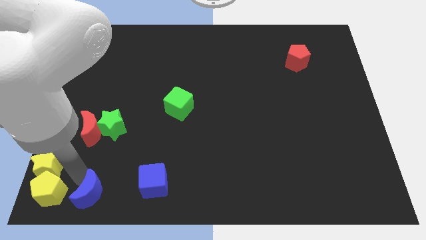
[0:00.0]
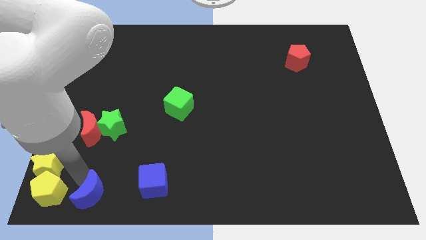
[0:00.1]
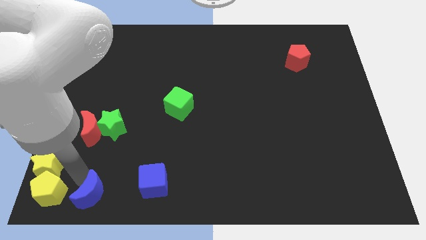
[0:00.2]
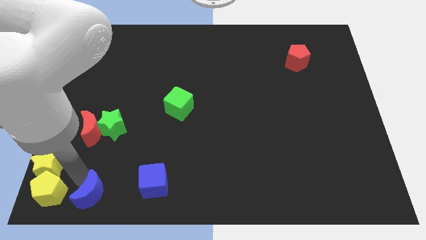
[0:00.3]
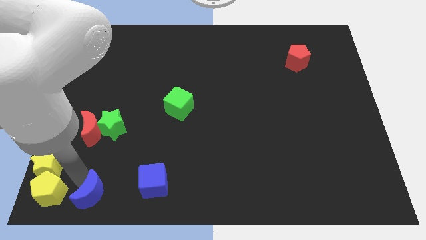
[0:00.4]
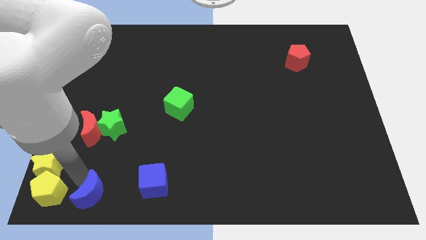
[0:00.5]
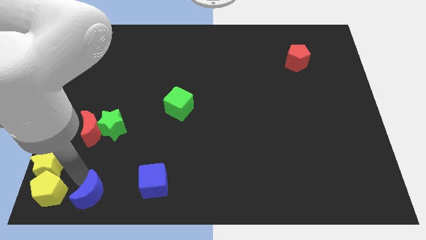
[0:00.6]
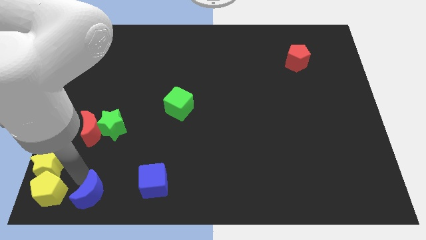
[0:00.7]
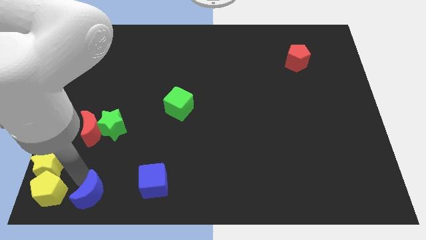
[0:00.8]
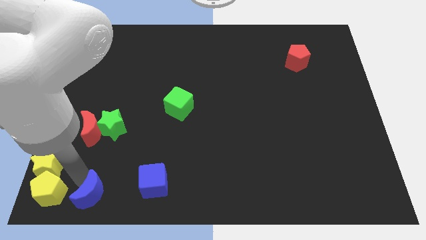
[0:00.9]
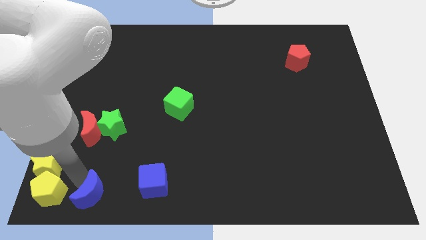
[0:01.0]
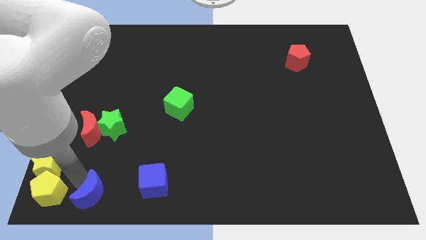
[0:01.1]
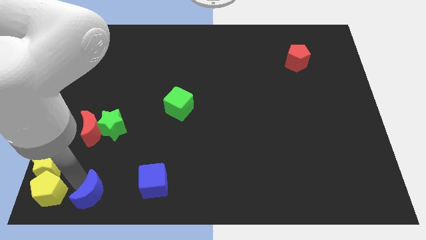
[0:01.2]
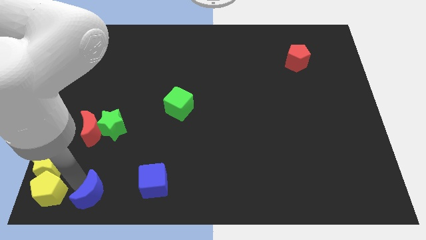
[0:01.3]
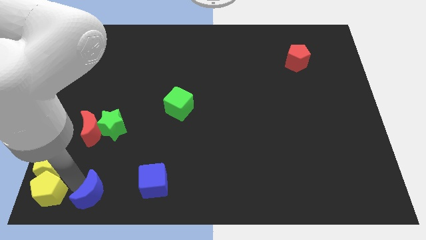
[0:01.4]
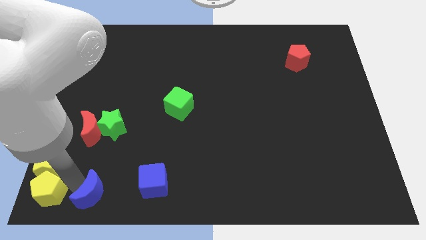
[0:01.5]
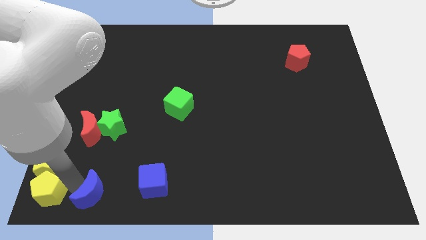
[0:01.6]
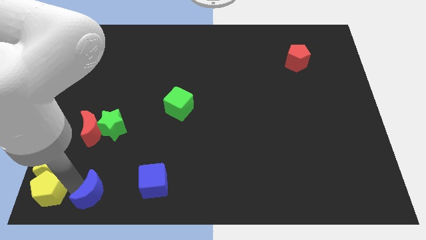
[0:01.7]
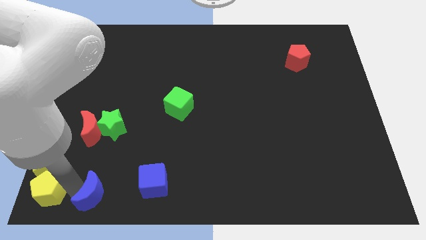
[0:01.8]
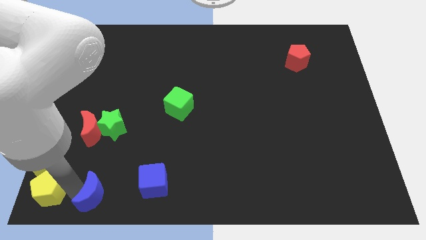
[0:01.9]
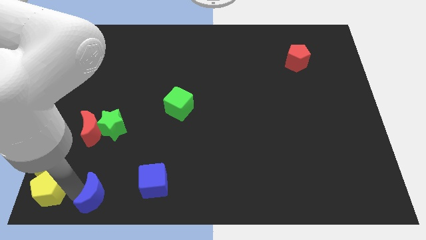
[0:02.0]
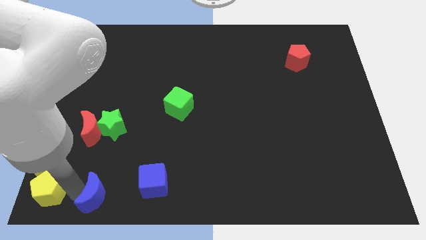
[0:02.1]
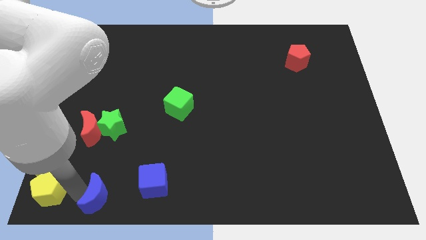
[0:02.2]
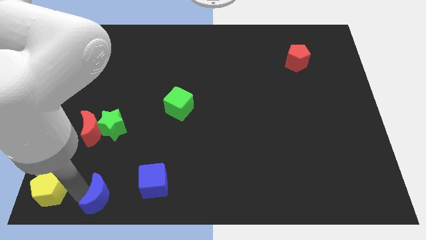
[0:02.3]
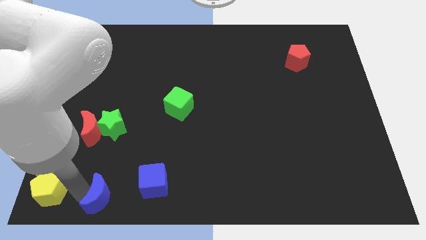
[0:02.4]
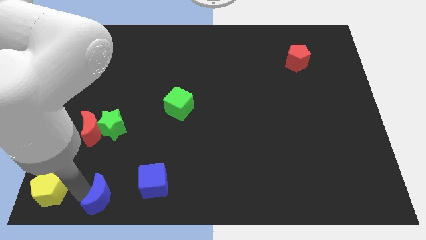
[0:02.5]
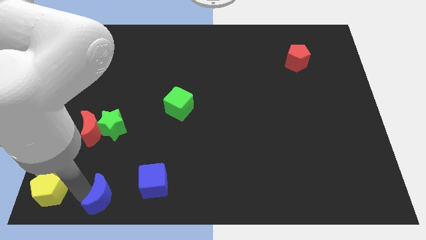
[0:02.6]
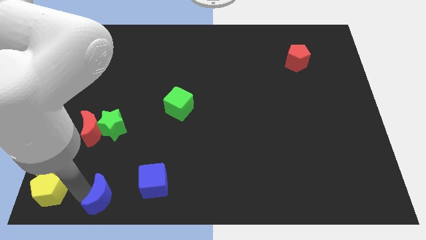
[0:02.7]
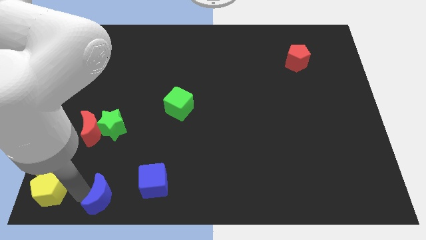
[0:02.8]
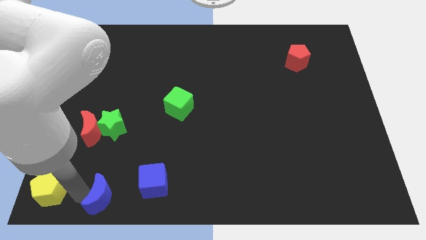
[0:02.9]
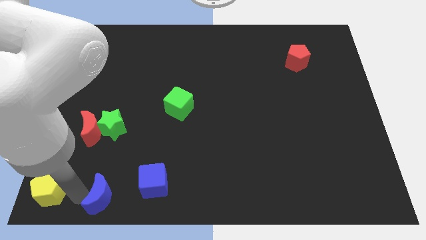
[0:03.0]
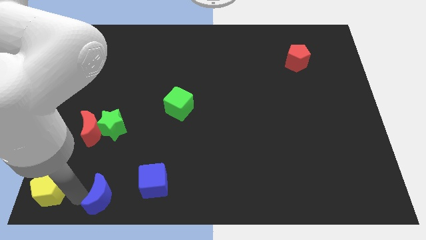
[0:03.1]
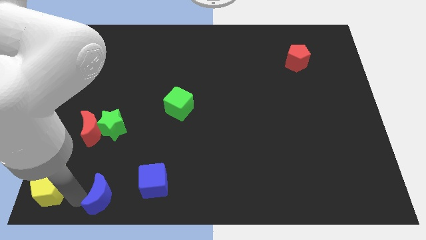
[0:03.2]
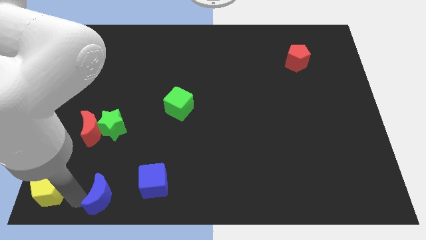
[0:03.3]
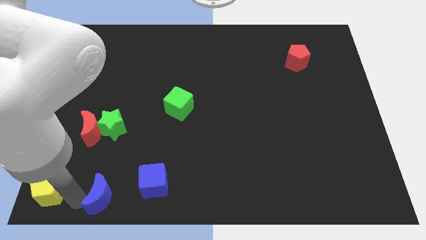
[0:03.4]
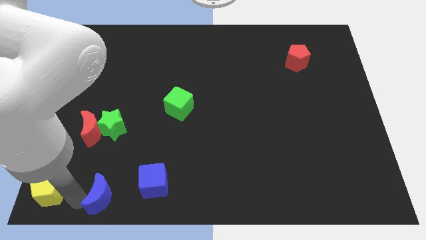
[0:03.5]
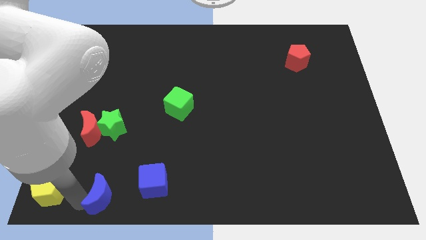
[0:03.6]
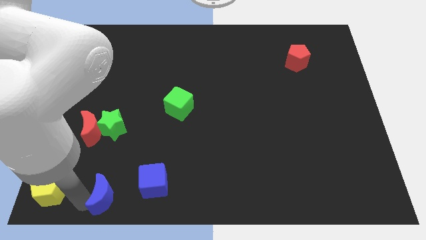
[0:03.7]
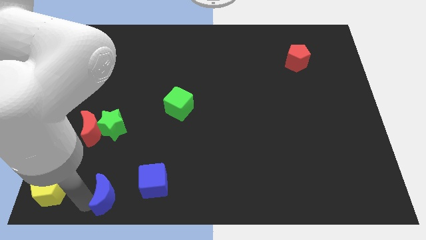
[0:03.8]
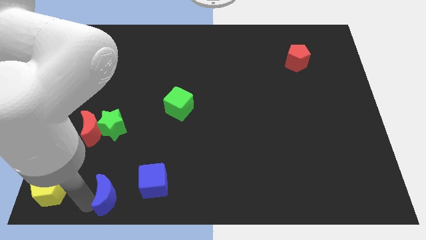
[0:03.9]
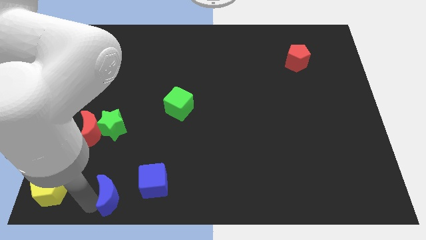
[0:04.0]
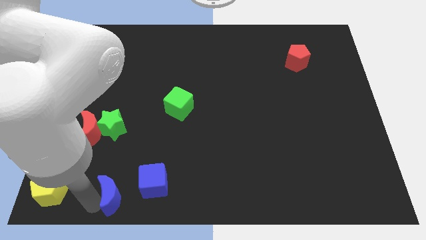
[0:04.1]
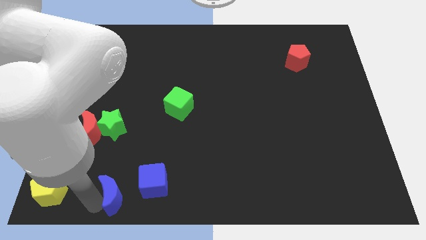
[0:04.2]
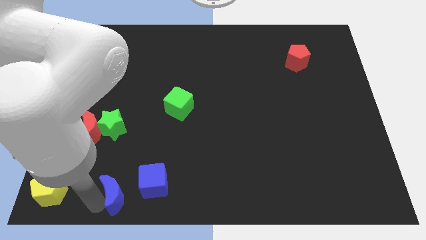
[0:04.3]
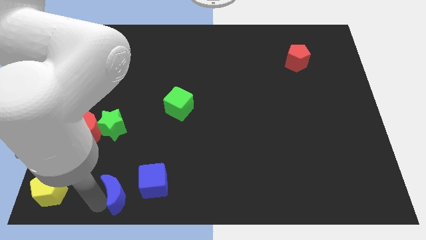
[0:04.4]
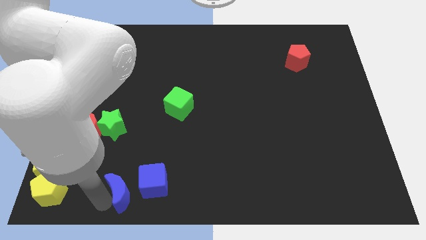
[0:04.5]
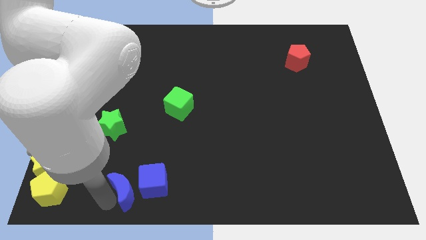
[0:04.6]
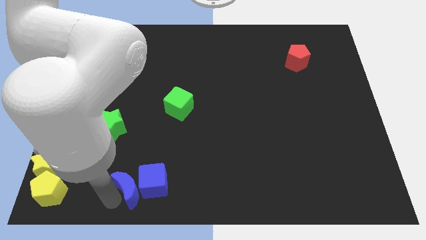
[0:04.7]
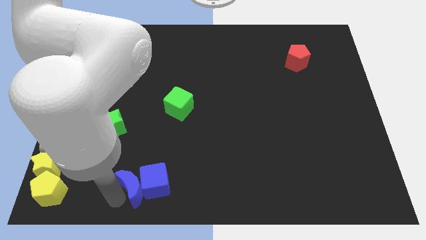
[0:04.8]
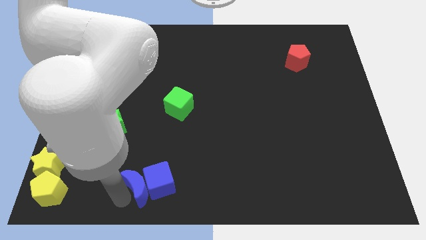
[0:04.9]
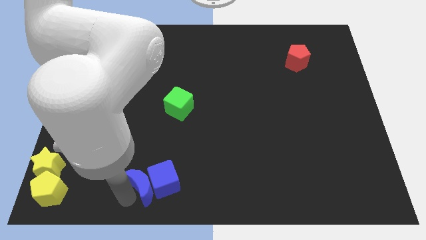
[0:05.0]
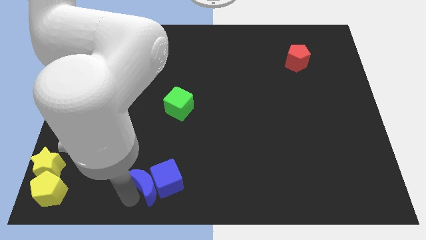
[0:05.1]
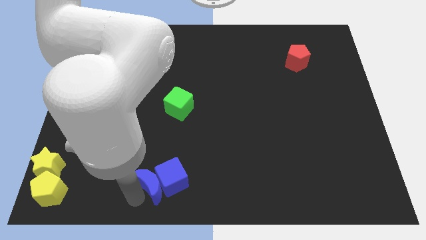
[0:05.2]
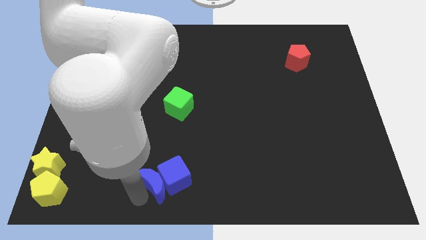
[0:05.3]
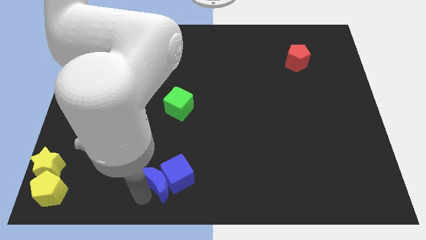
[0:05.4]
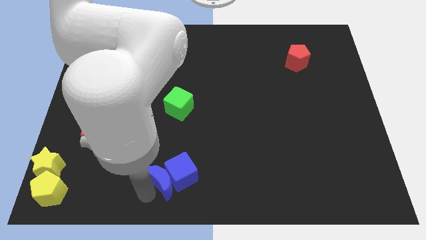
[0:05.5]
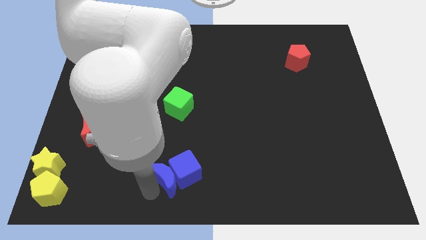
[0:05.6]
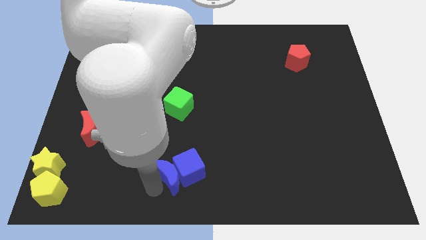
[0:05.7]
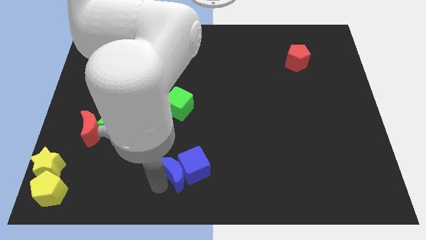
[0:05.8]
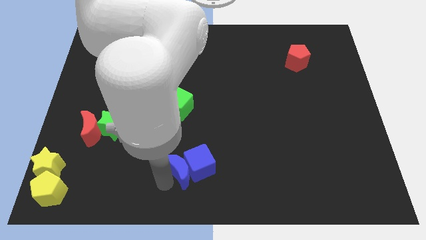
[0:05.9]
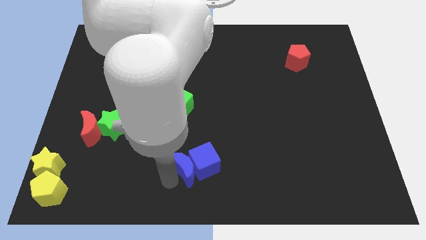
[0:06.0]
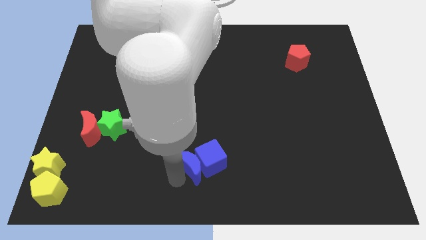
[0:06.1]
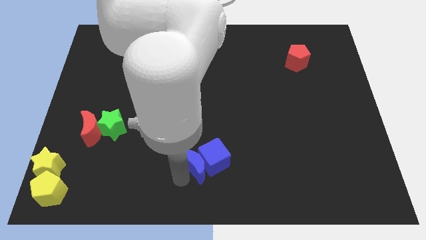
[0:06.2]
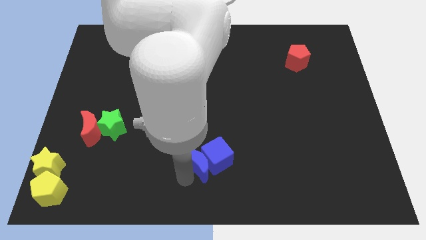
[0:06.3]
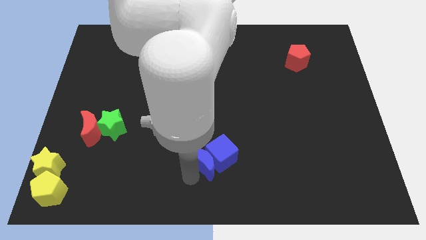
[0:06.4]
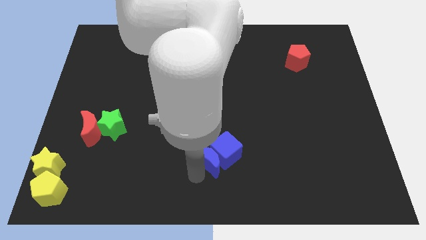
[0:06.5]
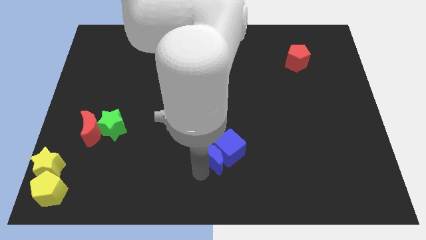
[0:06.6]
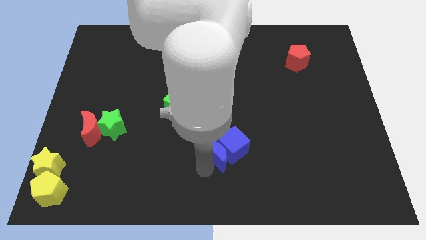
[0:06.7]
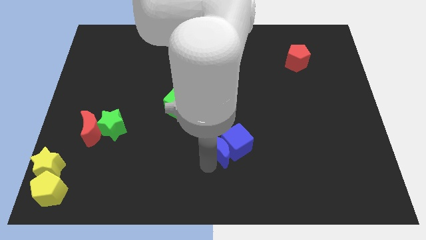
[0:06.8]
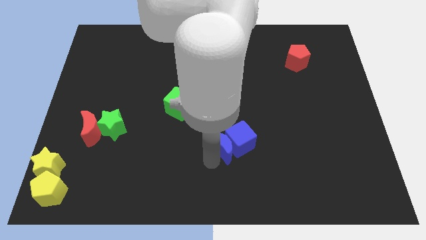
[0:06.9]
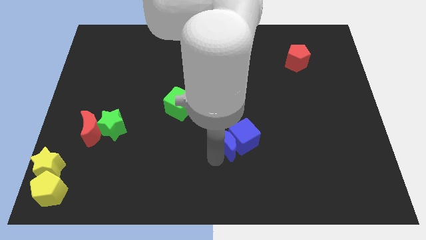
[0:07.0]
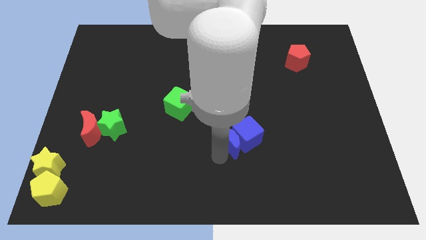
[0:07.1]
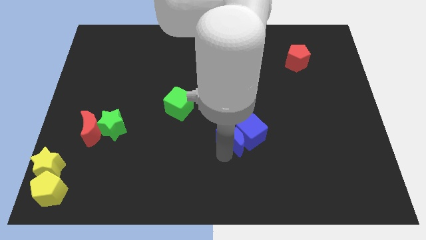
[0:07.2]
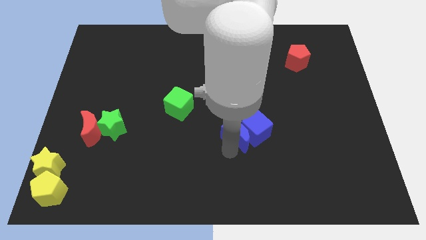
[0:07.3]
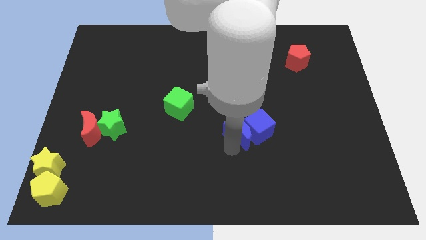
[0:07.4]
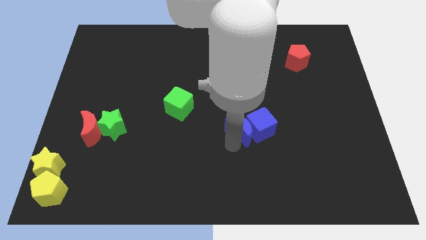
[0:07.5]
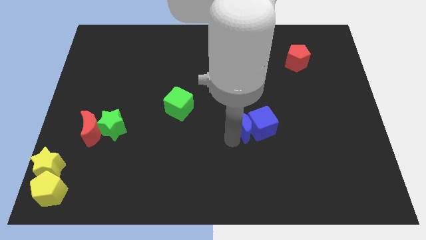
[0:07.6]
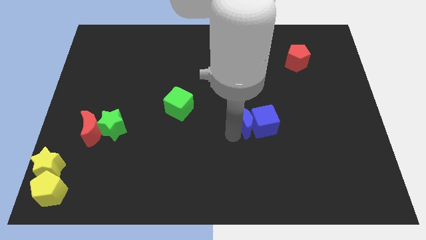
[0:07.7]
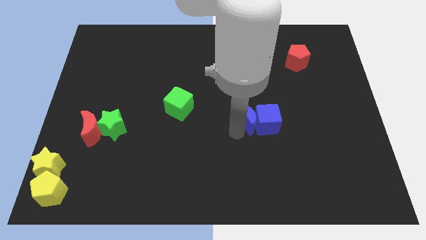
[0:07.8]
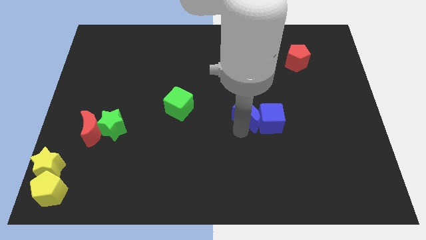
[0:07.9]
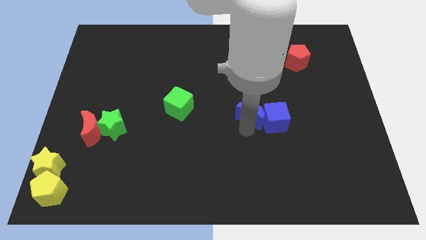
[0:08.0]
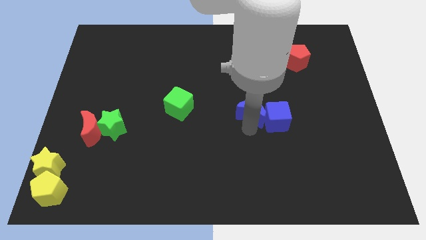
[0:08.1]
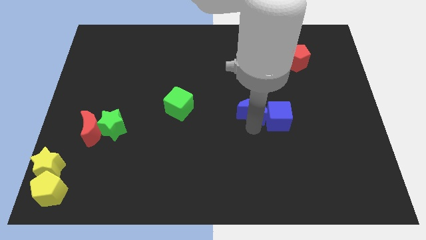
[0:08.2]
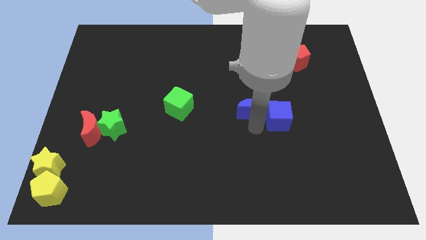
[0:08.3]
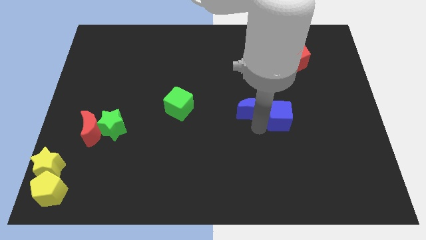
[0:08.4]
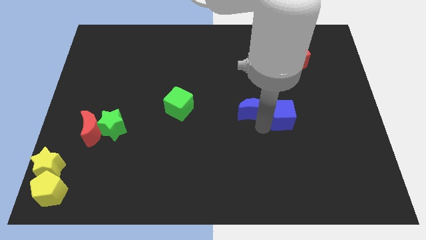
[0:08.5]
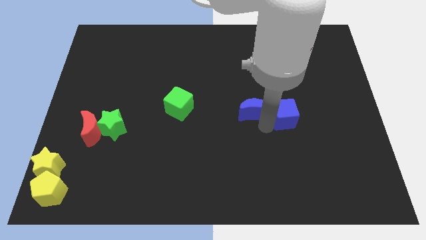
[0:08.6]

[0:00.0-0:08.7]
move blue crescent along with blue block to the right of green block

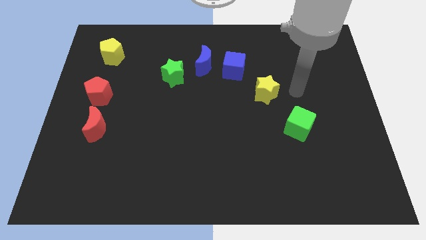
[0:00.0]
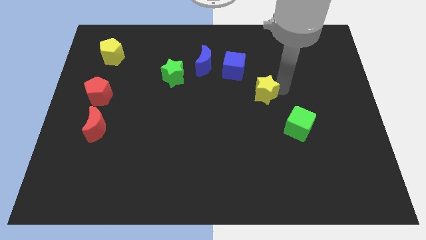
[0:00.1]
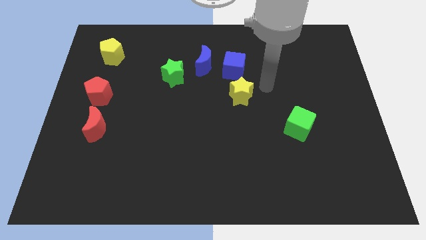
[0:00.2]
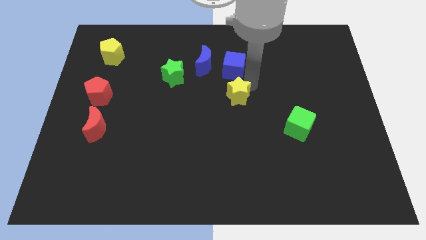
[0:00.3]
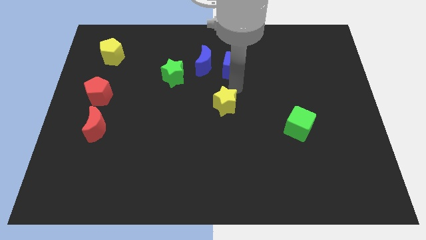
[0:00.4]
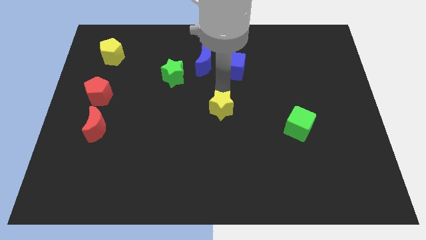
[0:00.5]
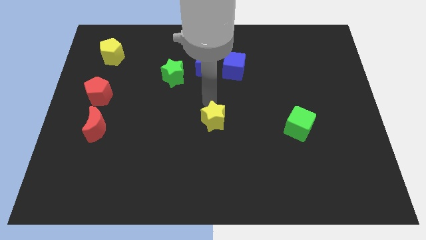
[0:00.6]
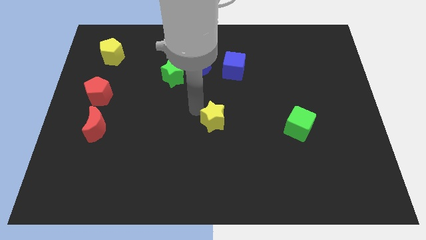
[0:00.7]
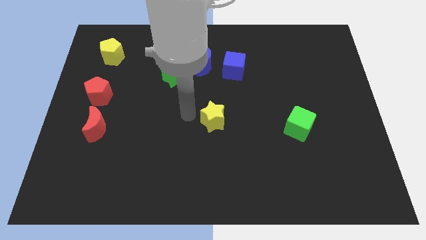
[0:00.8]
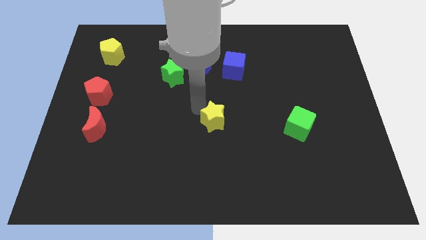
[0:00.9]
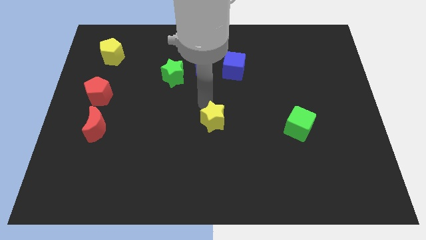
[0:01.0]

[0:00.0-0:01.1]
move the yellow star at the center of the board
